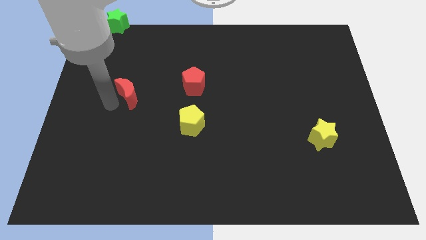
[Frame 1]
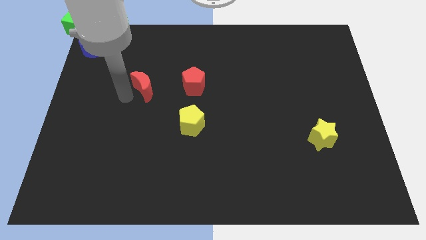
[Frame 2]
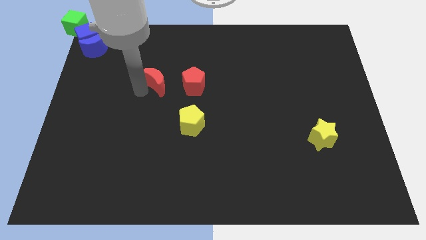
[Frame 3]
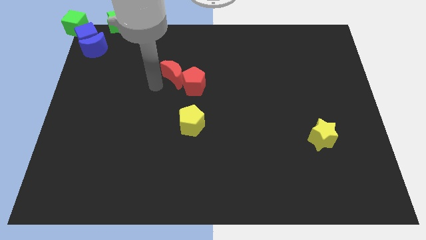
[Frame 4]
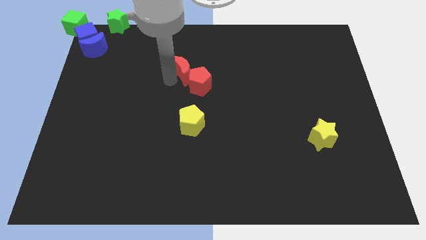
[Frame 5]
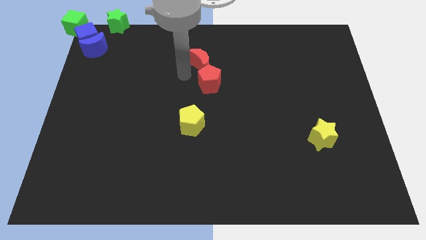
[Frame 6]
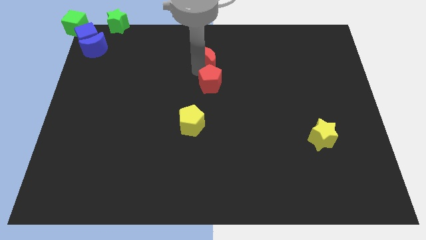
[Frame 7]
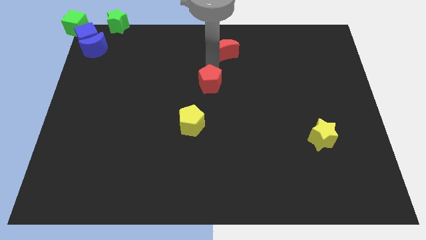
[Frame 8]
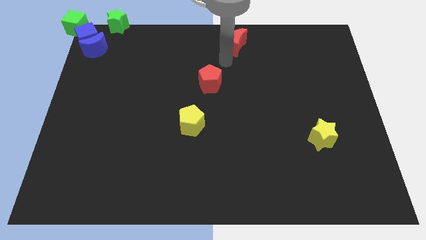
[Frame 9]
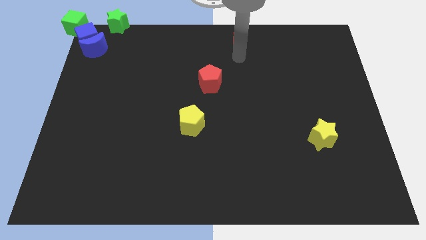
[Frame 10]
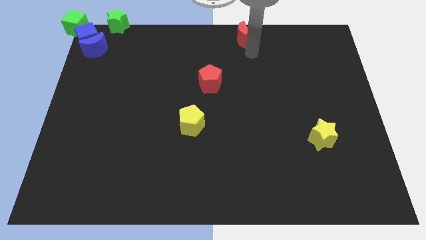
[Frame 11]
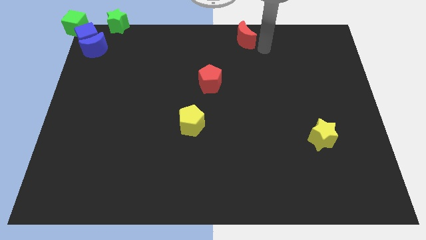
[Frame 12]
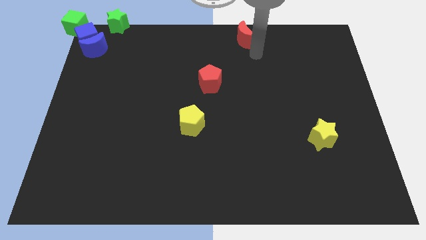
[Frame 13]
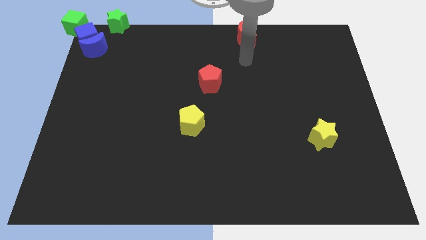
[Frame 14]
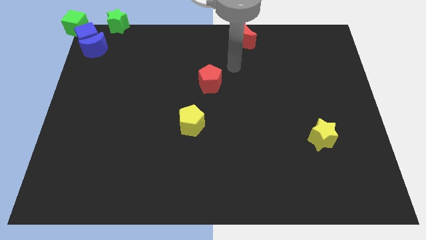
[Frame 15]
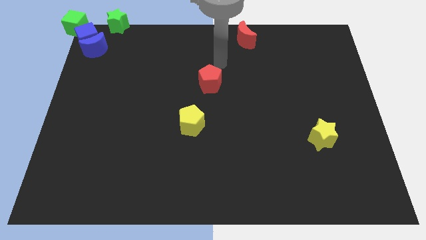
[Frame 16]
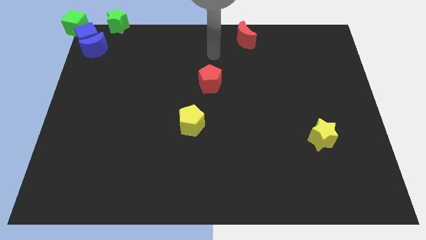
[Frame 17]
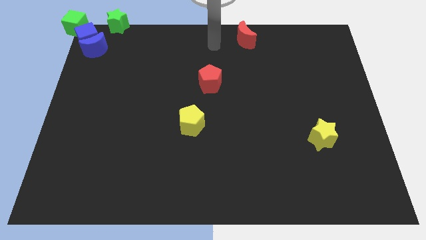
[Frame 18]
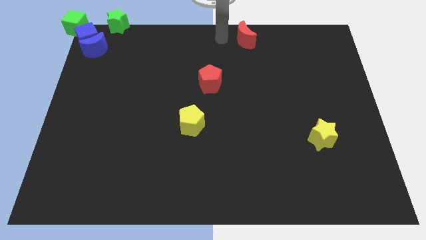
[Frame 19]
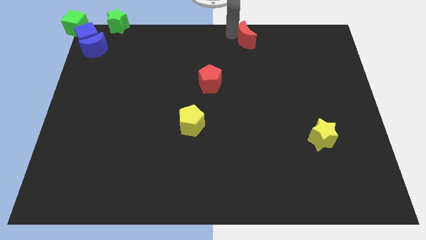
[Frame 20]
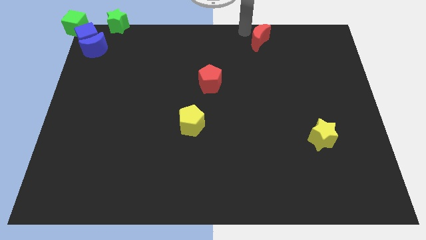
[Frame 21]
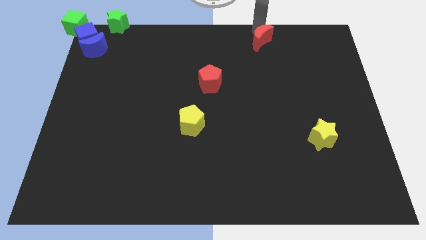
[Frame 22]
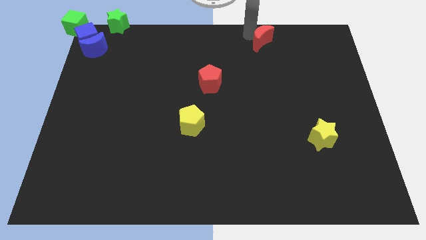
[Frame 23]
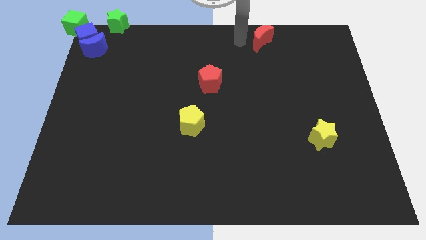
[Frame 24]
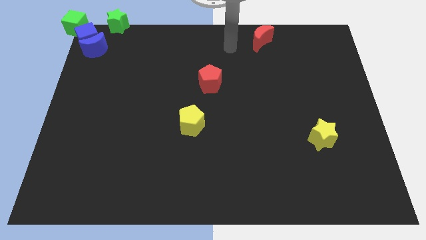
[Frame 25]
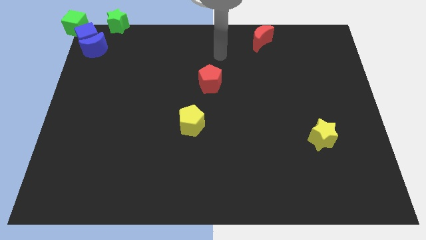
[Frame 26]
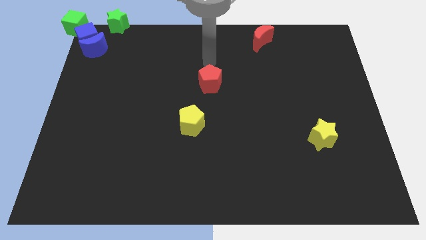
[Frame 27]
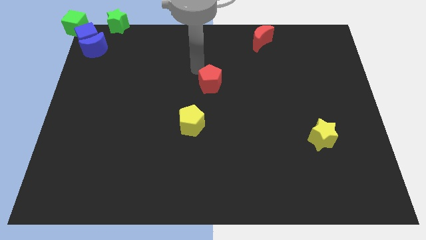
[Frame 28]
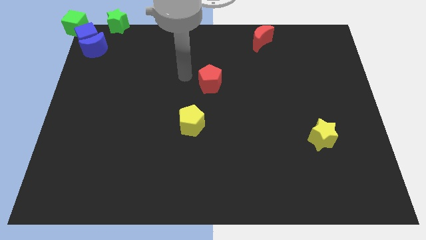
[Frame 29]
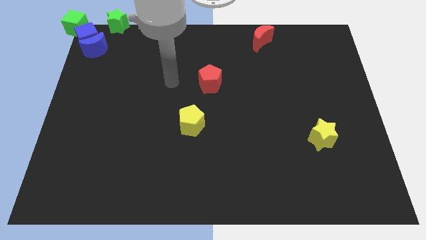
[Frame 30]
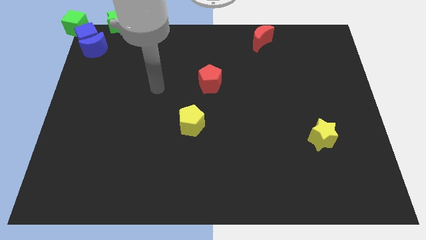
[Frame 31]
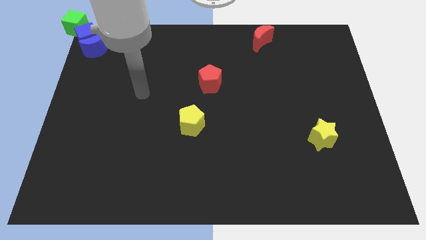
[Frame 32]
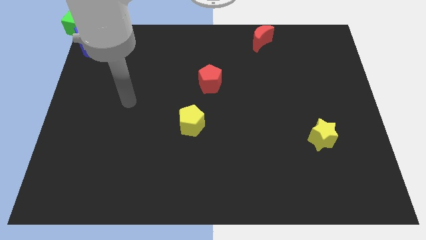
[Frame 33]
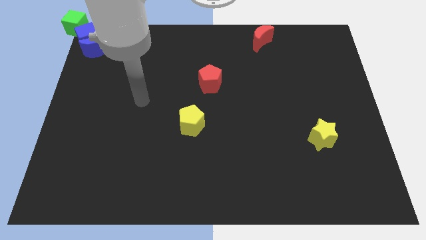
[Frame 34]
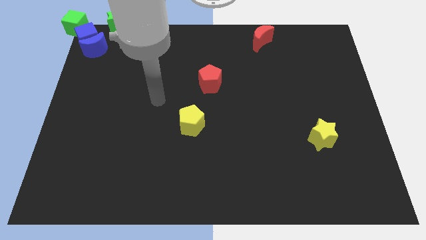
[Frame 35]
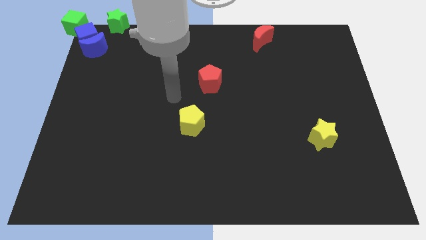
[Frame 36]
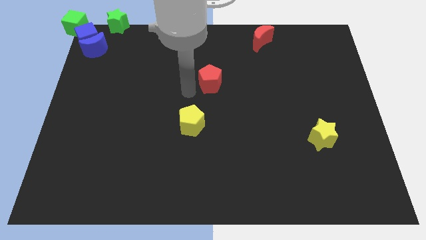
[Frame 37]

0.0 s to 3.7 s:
push the red crescent to the top center of the board

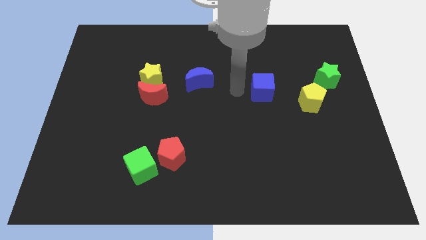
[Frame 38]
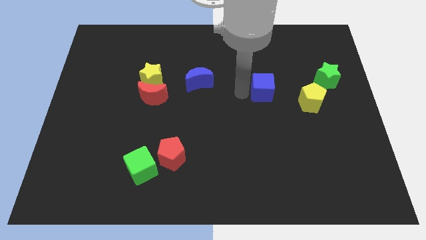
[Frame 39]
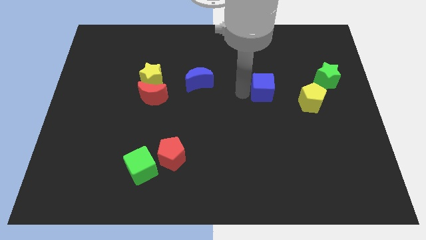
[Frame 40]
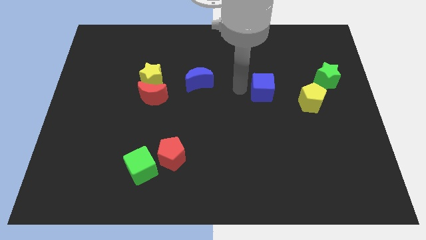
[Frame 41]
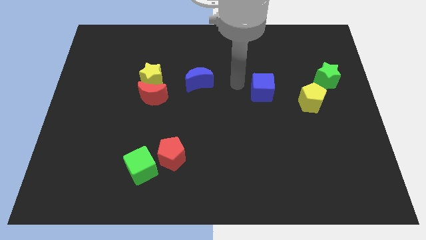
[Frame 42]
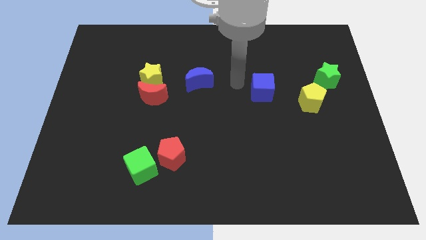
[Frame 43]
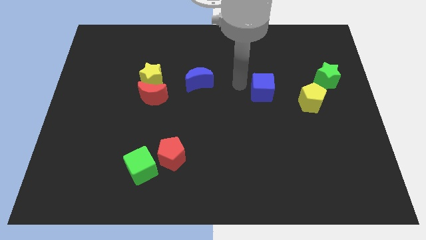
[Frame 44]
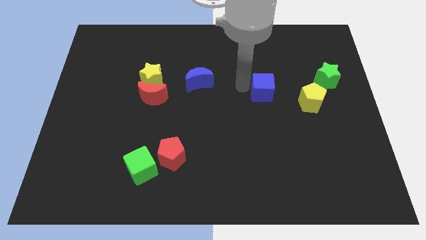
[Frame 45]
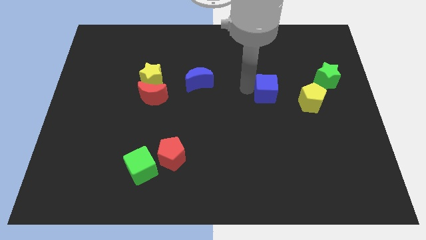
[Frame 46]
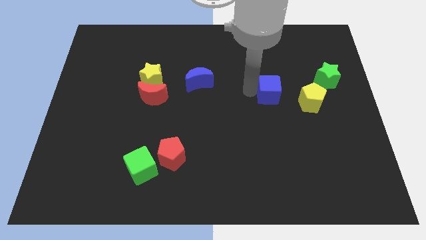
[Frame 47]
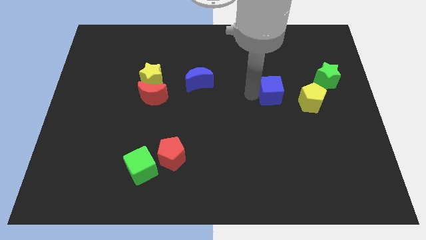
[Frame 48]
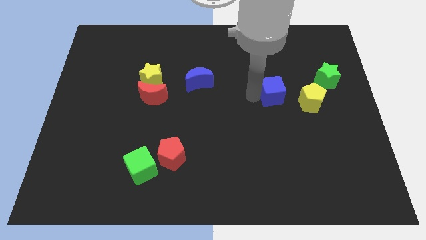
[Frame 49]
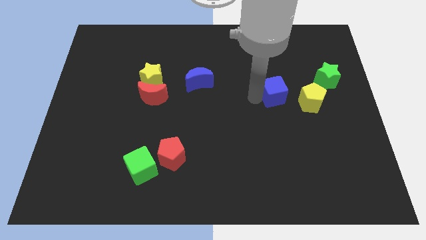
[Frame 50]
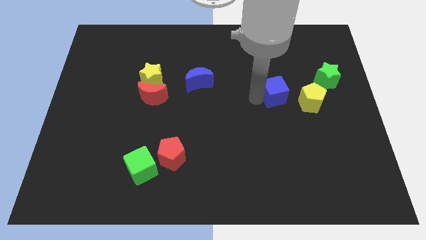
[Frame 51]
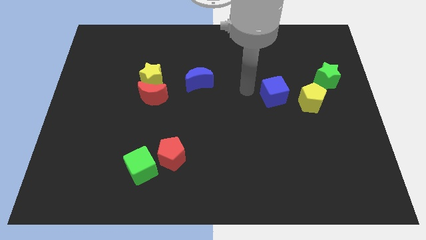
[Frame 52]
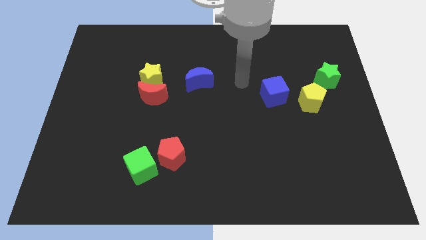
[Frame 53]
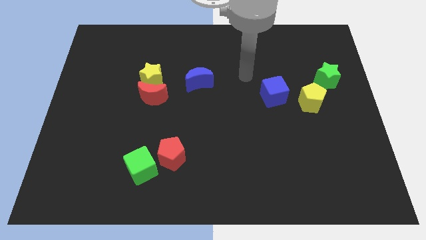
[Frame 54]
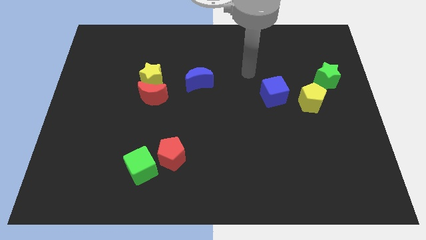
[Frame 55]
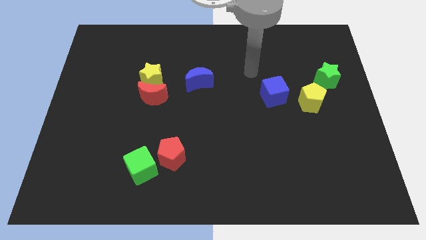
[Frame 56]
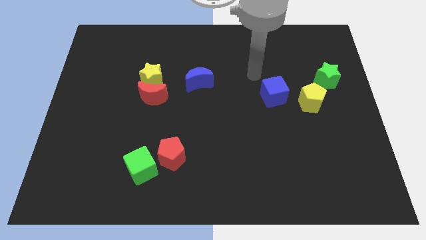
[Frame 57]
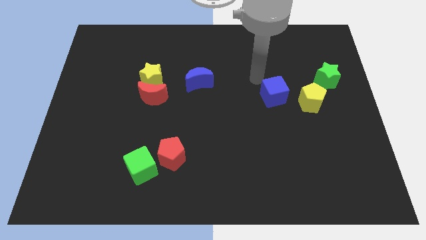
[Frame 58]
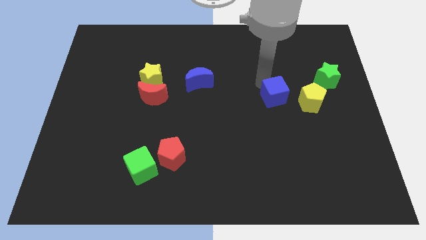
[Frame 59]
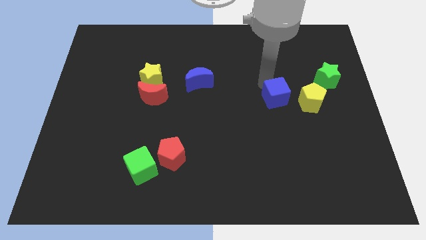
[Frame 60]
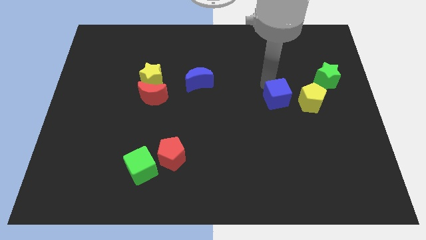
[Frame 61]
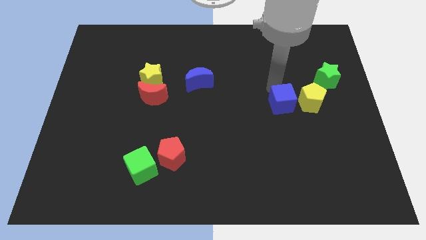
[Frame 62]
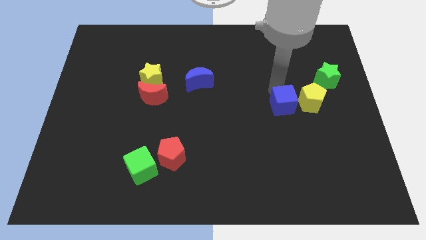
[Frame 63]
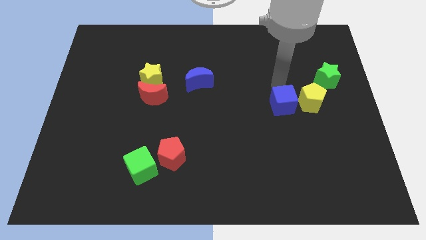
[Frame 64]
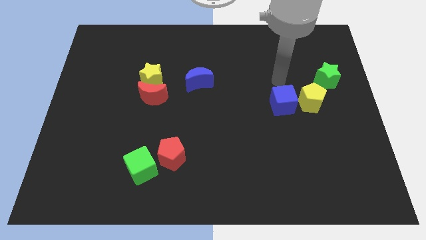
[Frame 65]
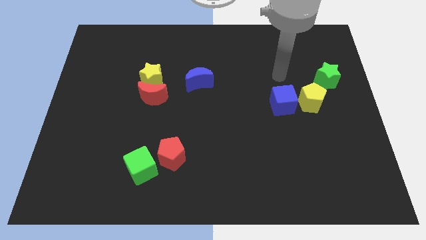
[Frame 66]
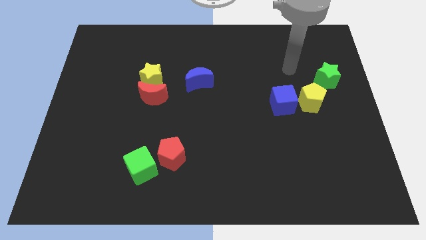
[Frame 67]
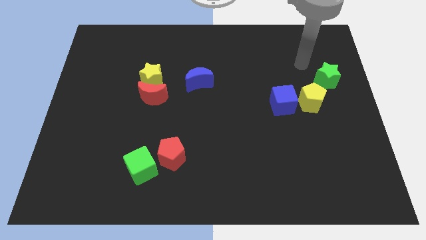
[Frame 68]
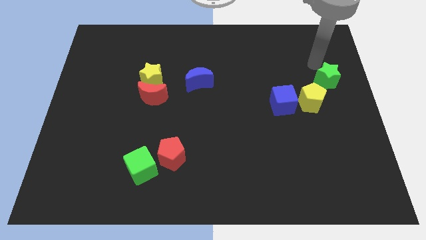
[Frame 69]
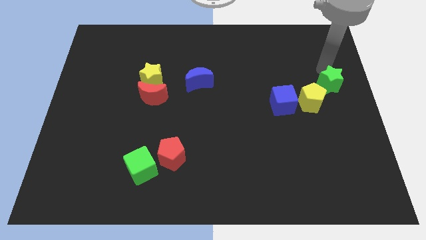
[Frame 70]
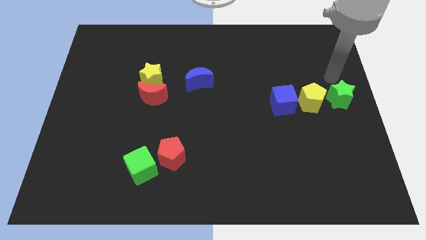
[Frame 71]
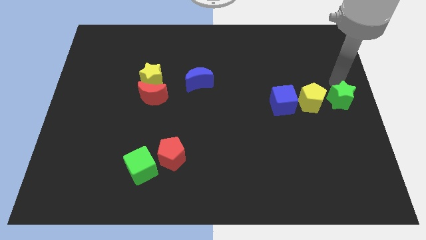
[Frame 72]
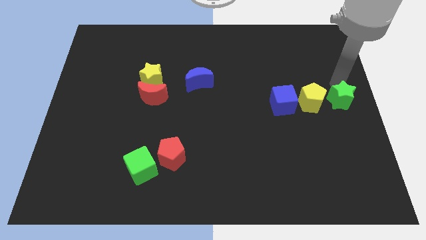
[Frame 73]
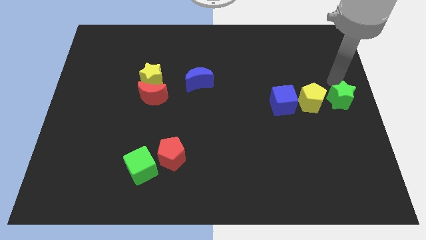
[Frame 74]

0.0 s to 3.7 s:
slightly push down the green star

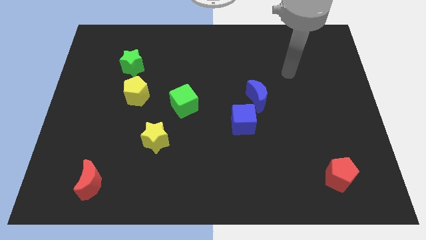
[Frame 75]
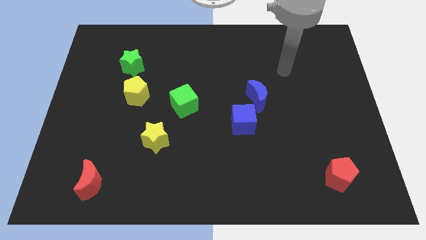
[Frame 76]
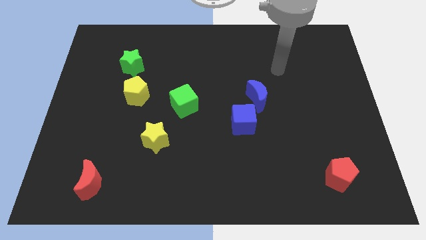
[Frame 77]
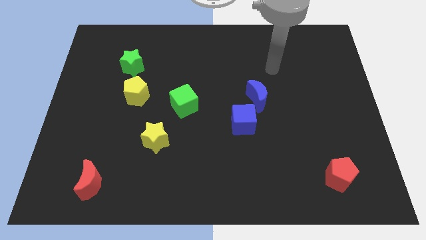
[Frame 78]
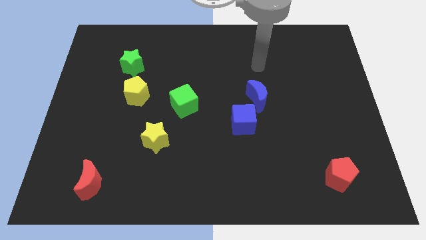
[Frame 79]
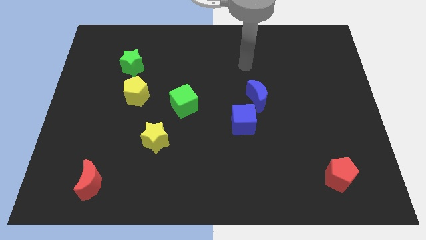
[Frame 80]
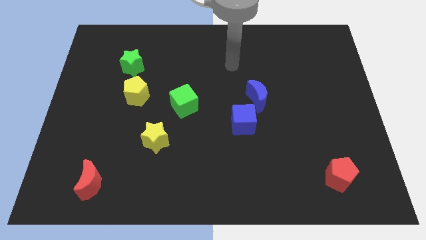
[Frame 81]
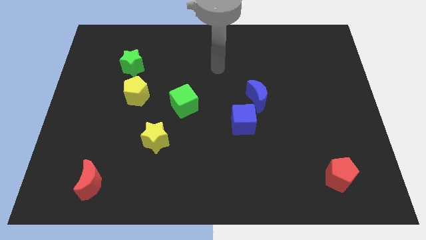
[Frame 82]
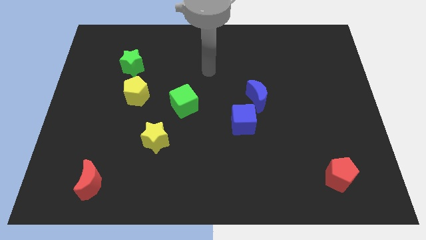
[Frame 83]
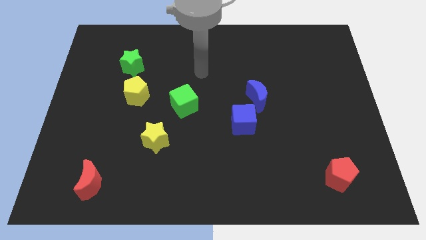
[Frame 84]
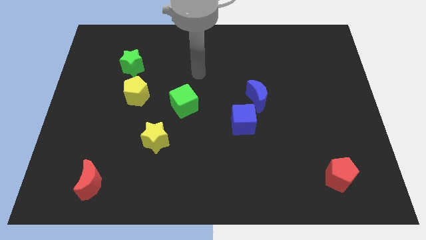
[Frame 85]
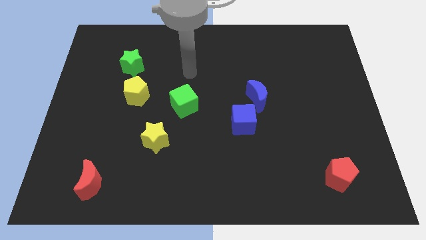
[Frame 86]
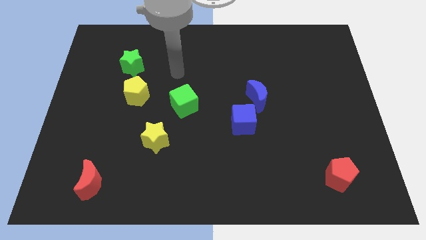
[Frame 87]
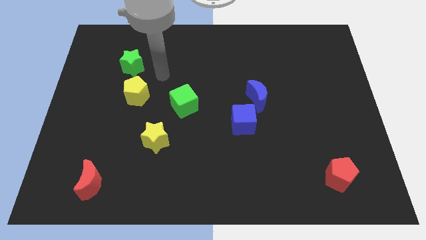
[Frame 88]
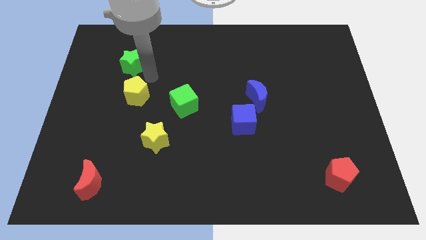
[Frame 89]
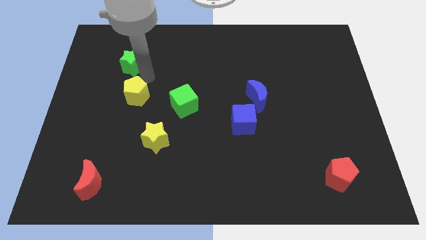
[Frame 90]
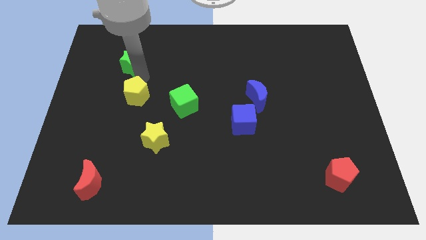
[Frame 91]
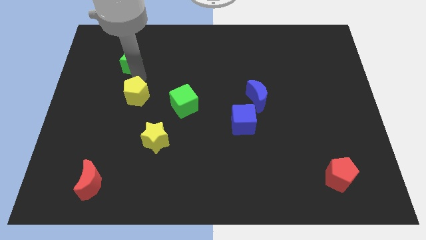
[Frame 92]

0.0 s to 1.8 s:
move your arm to the top of yellow pentagon

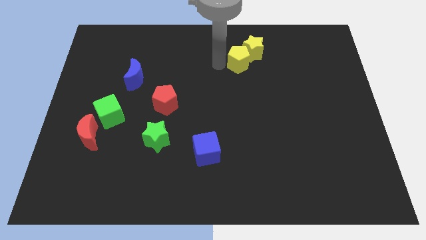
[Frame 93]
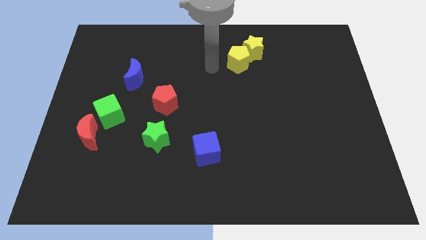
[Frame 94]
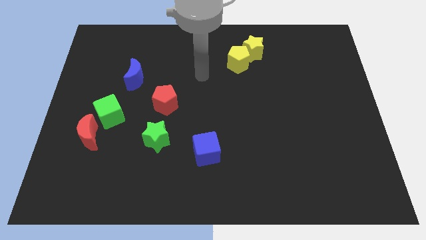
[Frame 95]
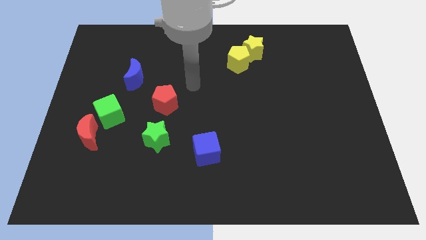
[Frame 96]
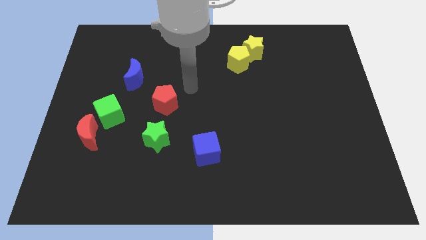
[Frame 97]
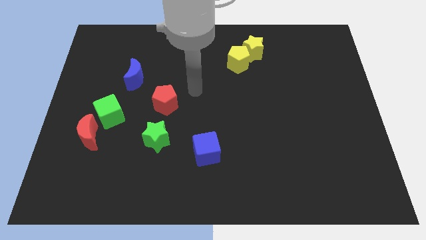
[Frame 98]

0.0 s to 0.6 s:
move away from the yellow blocks
